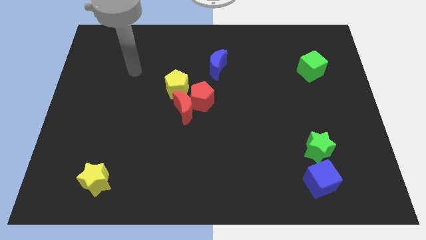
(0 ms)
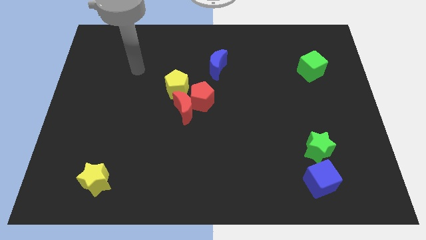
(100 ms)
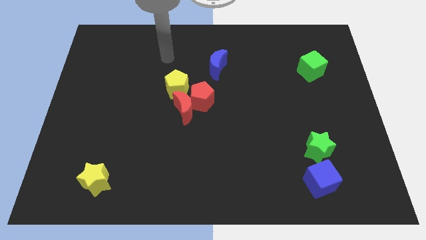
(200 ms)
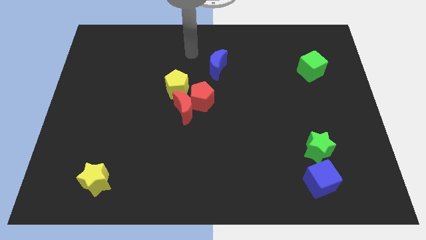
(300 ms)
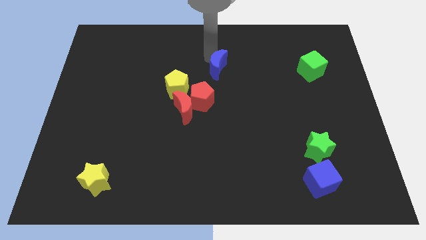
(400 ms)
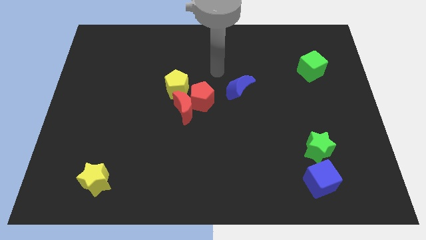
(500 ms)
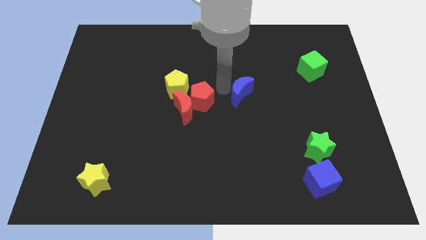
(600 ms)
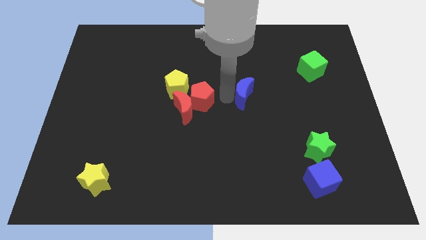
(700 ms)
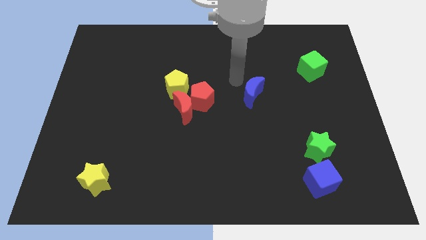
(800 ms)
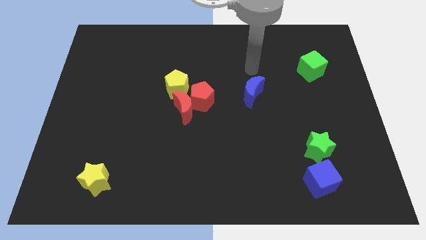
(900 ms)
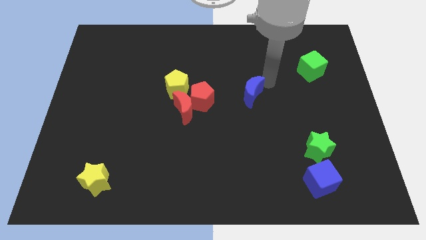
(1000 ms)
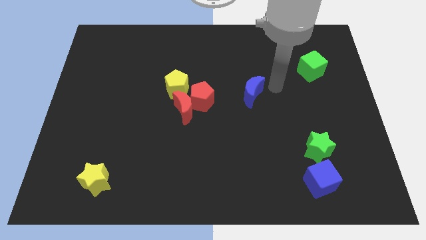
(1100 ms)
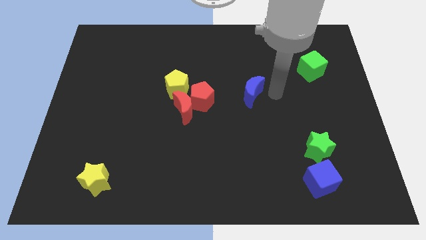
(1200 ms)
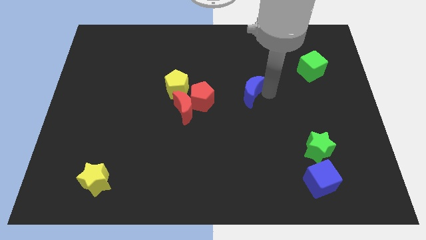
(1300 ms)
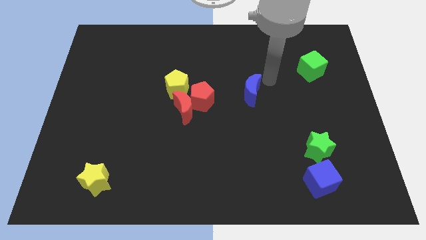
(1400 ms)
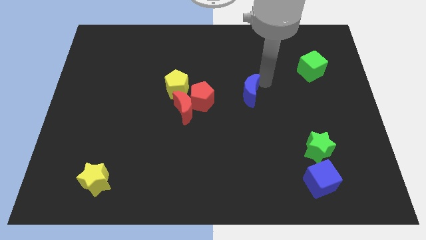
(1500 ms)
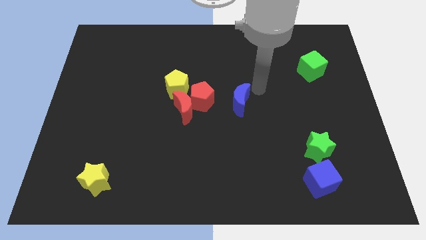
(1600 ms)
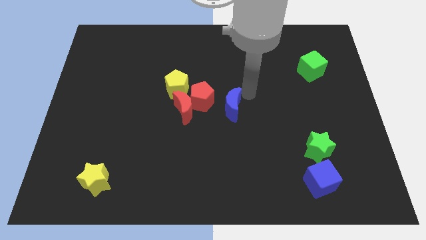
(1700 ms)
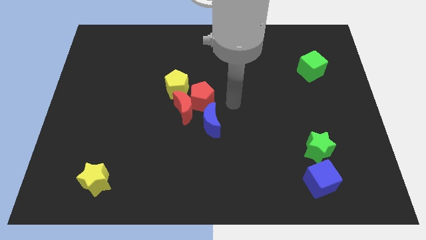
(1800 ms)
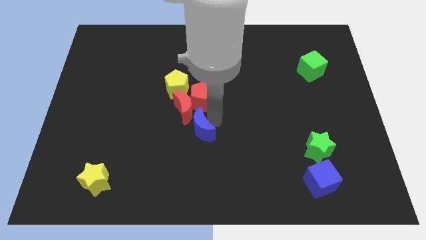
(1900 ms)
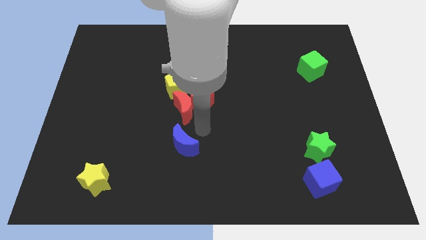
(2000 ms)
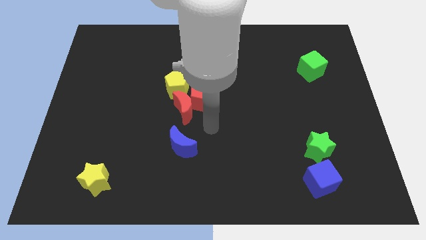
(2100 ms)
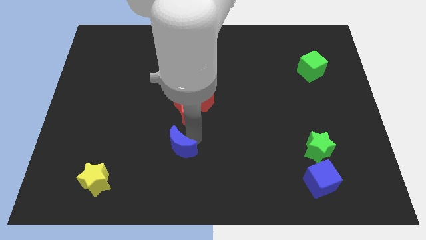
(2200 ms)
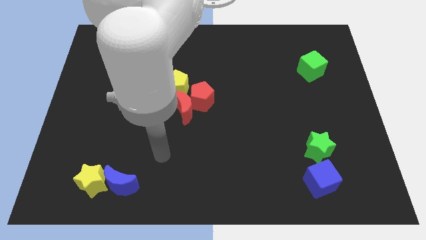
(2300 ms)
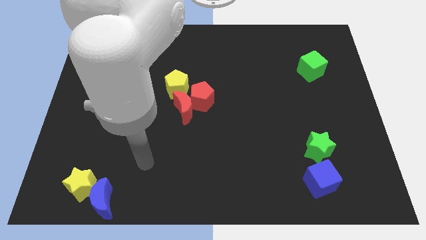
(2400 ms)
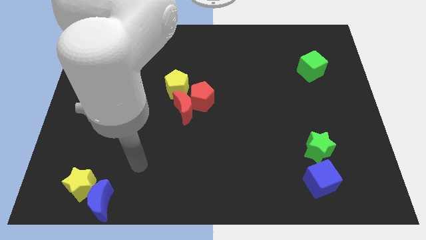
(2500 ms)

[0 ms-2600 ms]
move the blue moon towards the yellow star

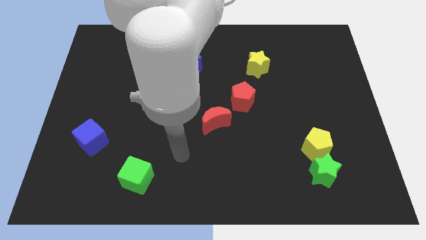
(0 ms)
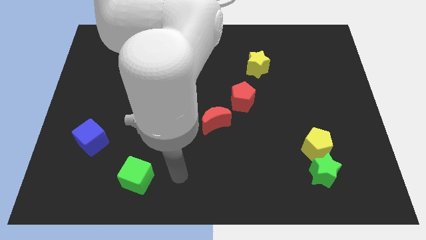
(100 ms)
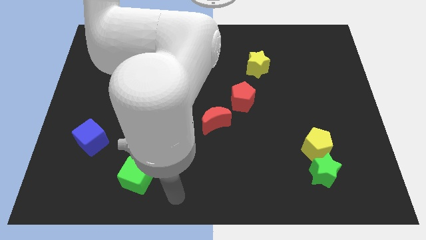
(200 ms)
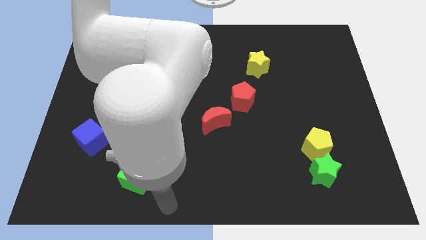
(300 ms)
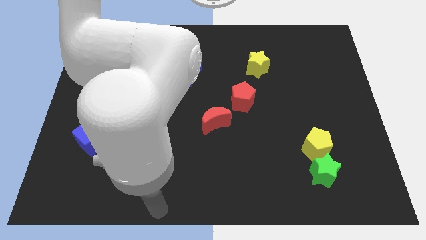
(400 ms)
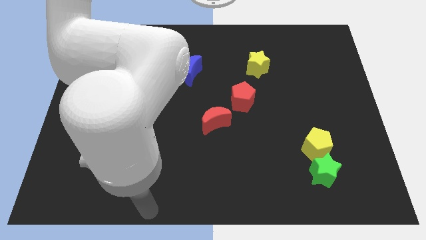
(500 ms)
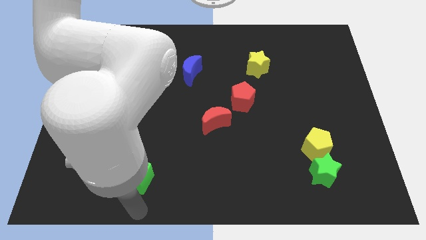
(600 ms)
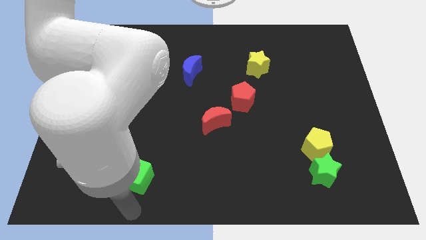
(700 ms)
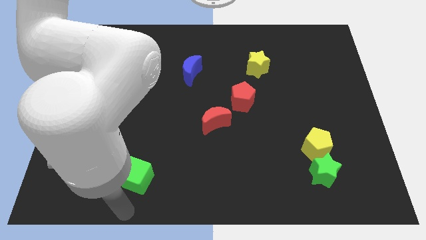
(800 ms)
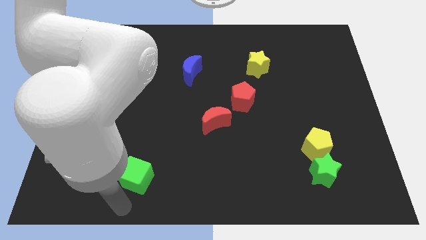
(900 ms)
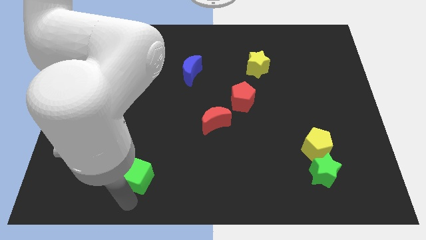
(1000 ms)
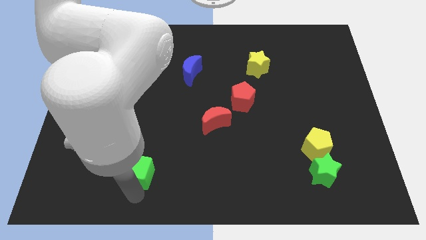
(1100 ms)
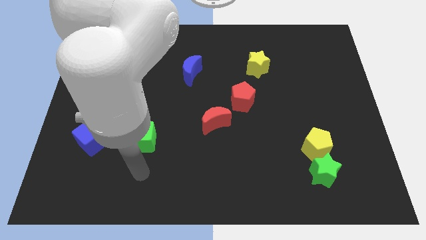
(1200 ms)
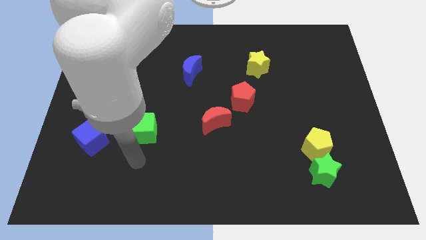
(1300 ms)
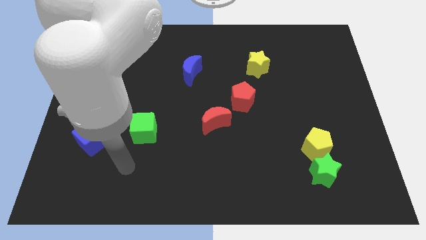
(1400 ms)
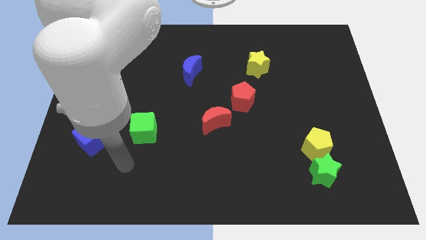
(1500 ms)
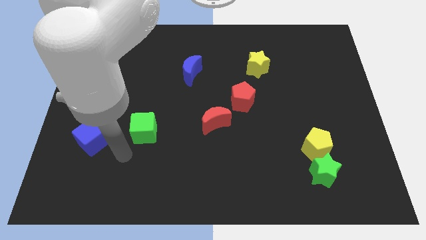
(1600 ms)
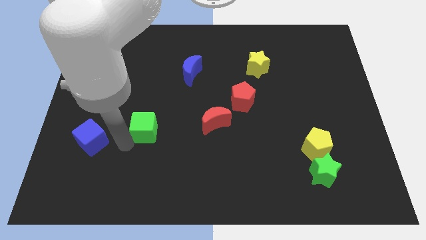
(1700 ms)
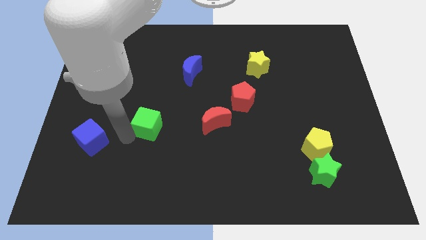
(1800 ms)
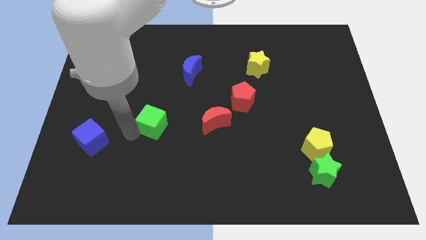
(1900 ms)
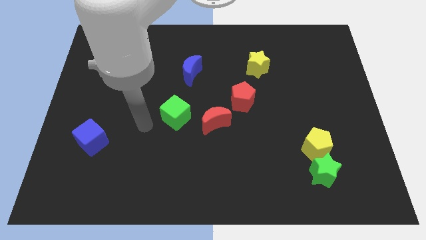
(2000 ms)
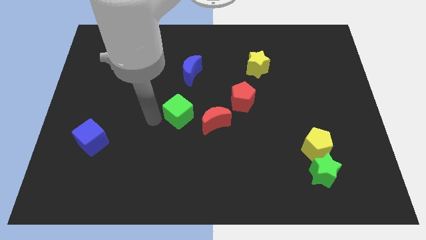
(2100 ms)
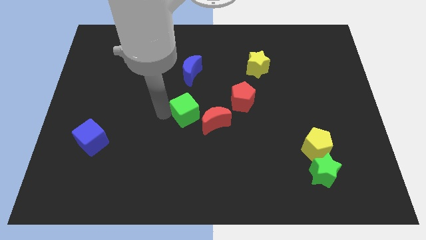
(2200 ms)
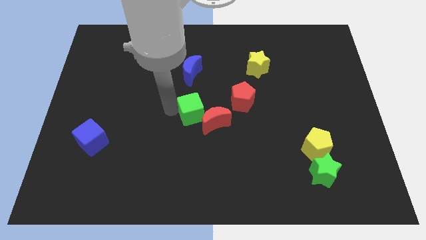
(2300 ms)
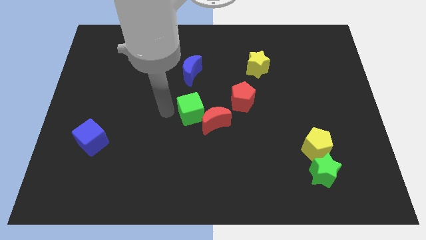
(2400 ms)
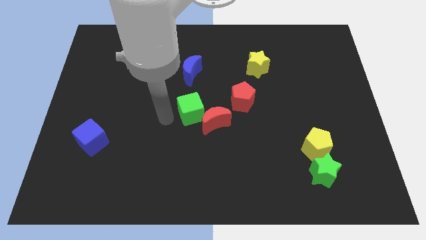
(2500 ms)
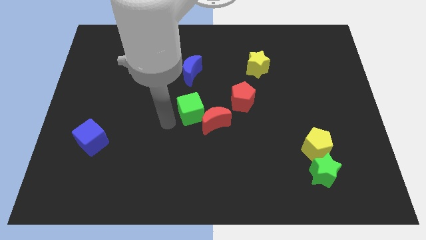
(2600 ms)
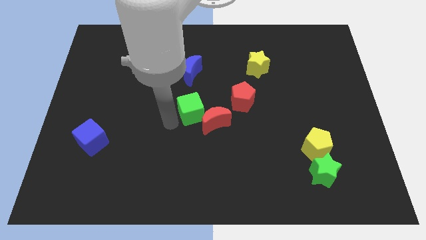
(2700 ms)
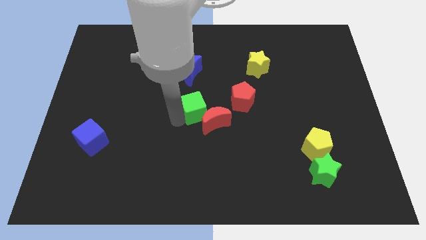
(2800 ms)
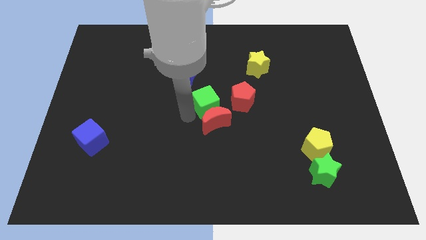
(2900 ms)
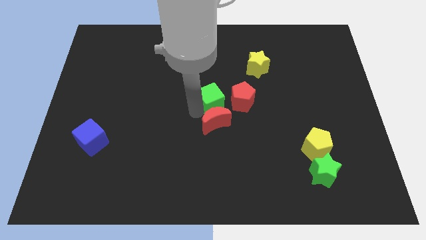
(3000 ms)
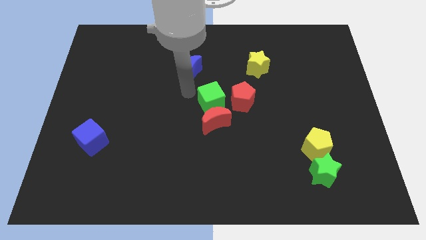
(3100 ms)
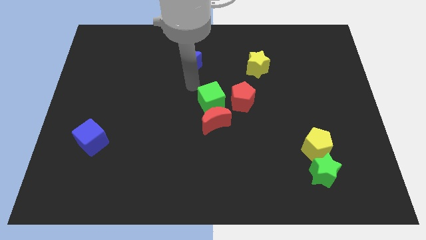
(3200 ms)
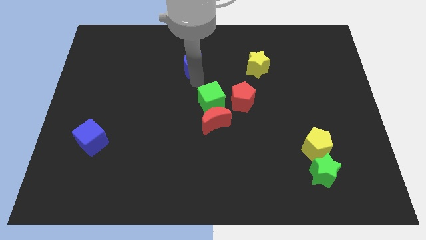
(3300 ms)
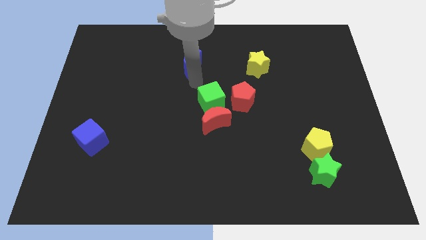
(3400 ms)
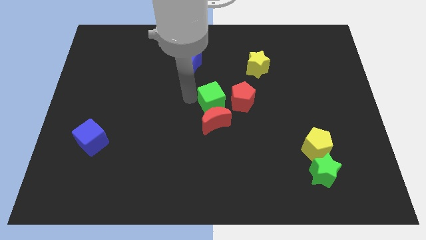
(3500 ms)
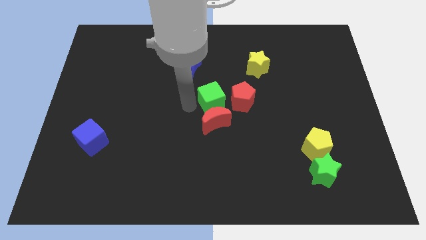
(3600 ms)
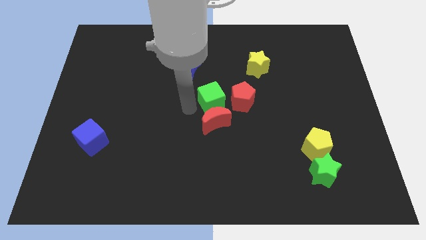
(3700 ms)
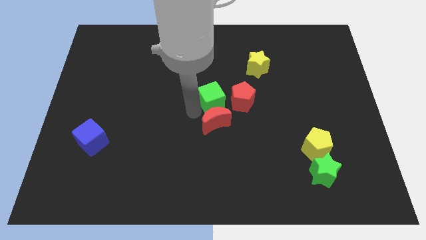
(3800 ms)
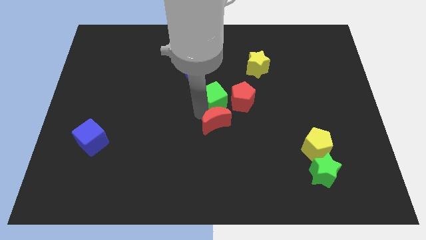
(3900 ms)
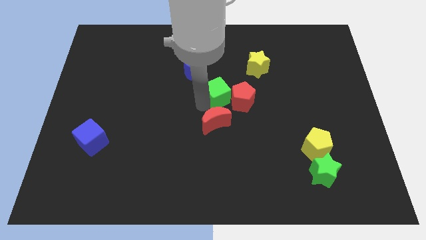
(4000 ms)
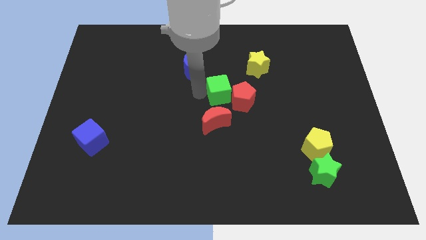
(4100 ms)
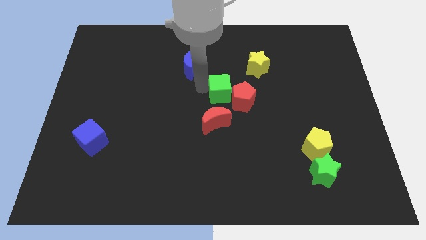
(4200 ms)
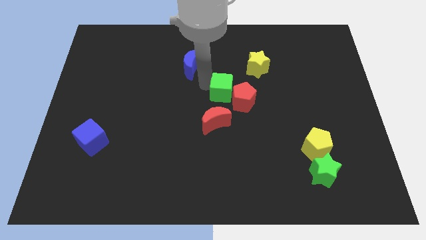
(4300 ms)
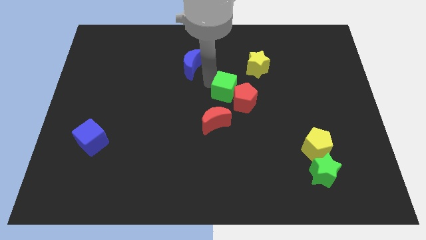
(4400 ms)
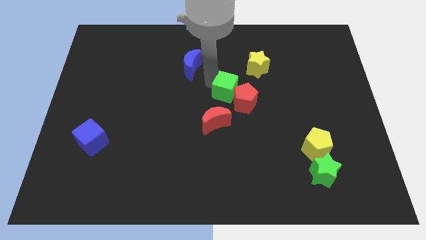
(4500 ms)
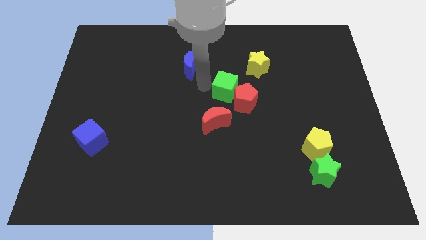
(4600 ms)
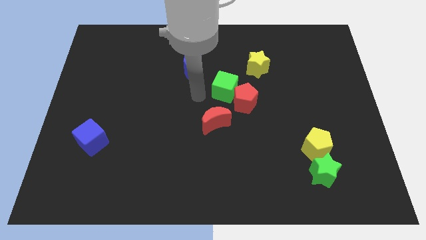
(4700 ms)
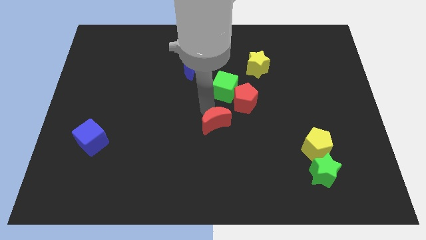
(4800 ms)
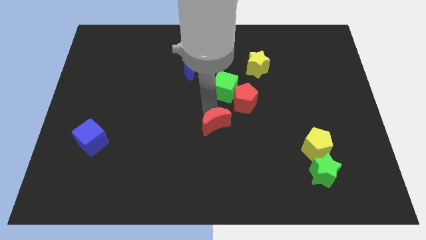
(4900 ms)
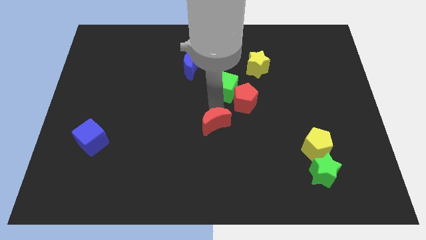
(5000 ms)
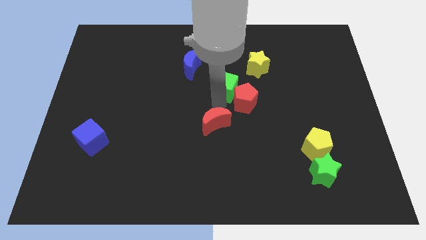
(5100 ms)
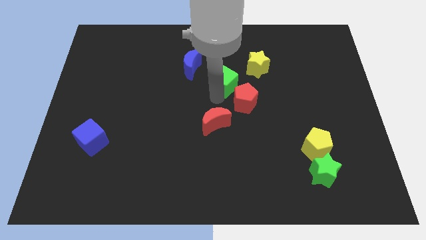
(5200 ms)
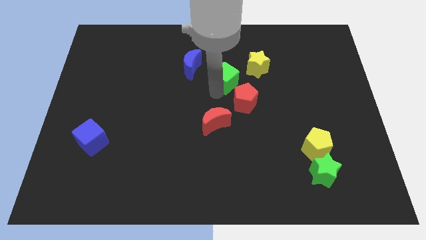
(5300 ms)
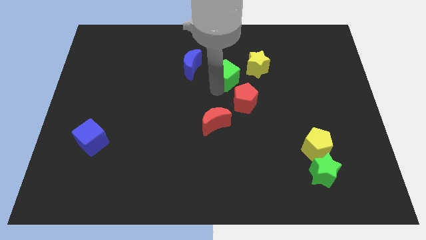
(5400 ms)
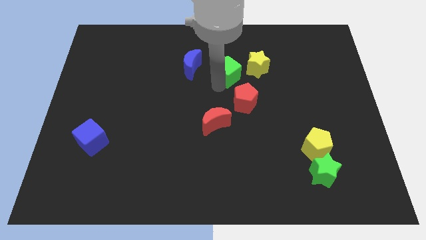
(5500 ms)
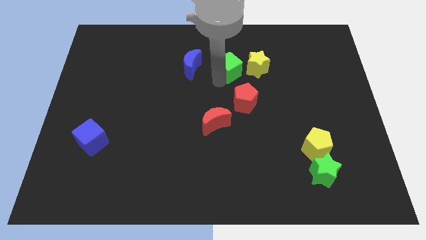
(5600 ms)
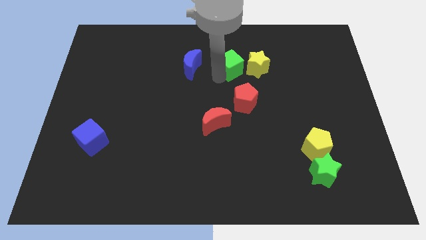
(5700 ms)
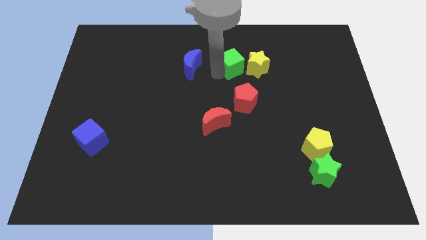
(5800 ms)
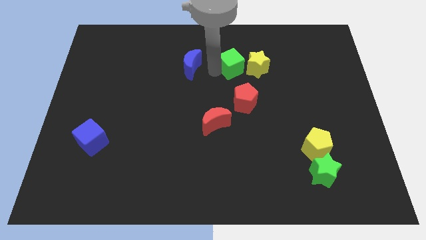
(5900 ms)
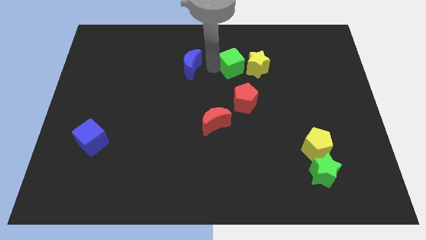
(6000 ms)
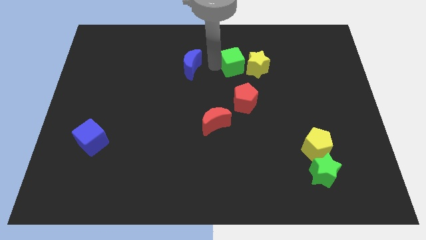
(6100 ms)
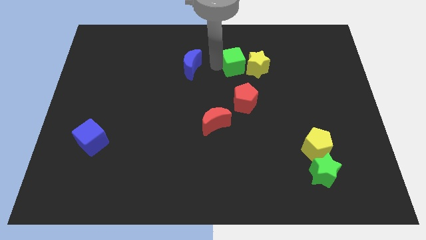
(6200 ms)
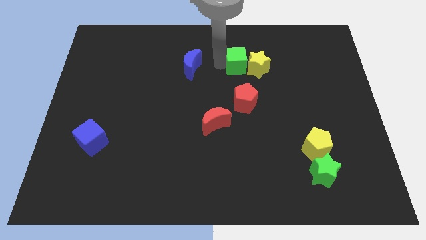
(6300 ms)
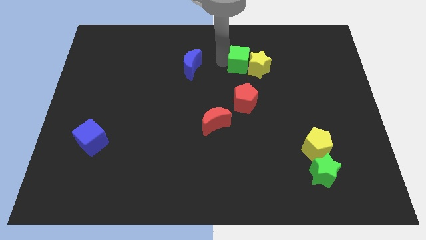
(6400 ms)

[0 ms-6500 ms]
put the green cube towards the yellow star
